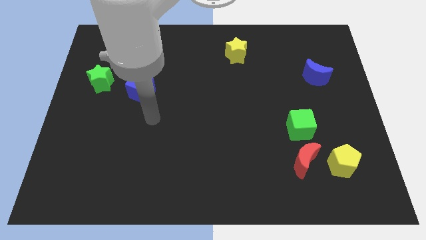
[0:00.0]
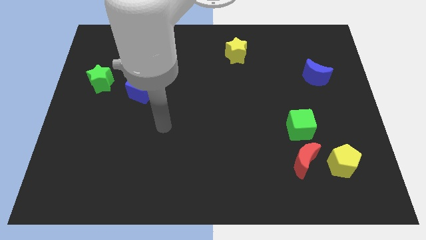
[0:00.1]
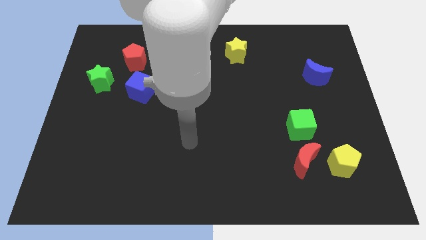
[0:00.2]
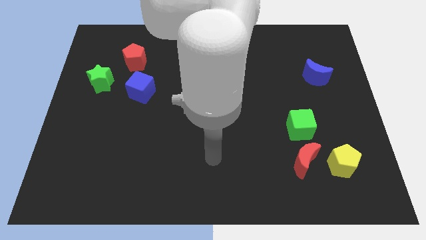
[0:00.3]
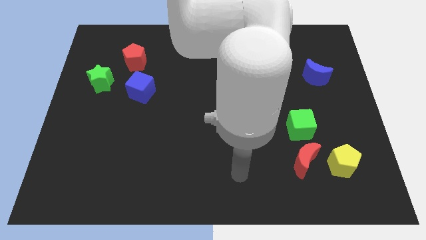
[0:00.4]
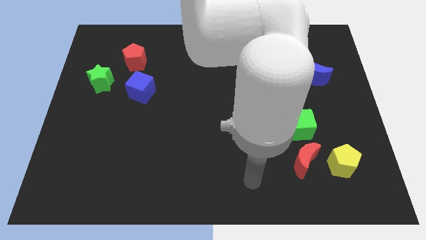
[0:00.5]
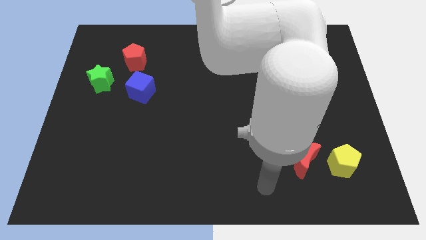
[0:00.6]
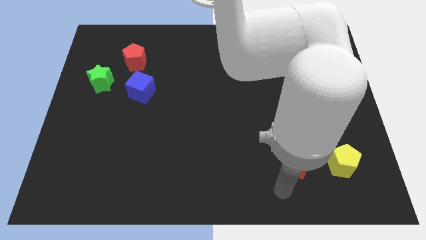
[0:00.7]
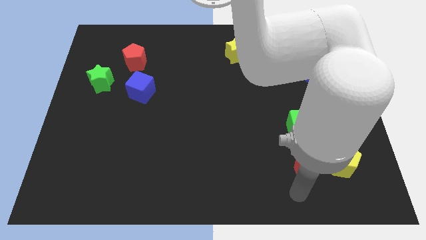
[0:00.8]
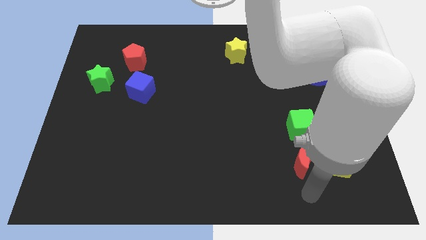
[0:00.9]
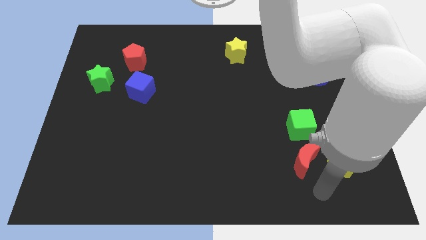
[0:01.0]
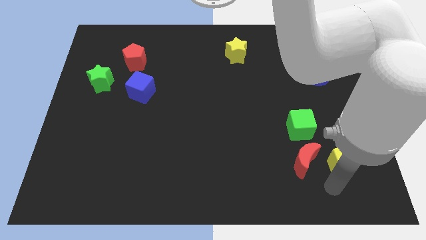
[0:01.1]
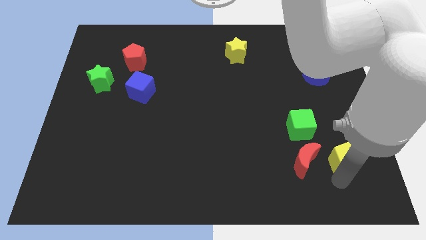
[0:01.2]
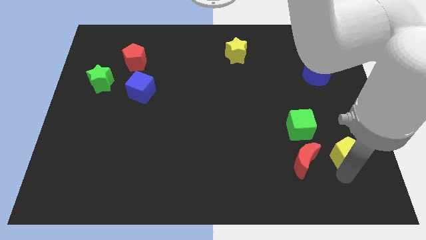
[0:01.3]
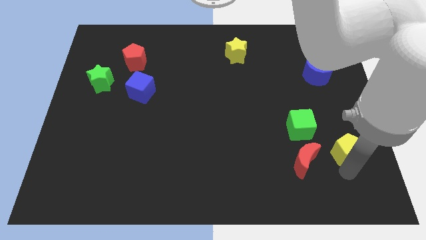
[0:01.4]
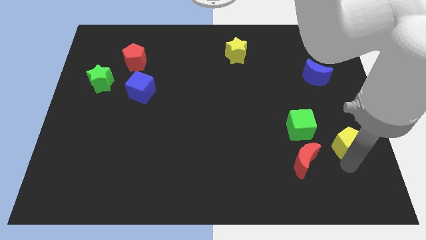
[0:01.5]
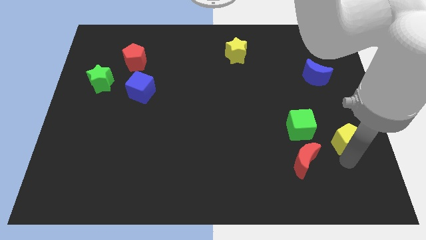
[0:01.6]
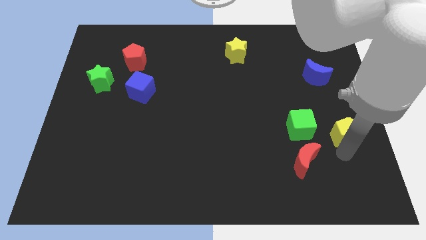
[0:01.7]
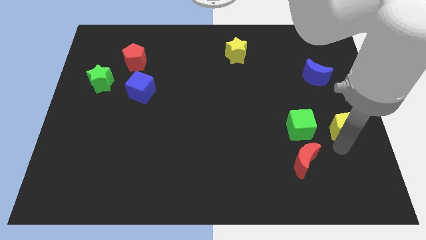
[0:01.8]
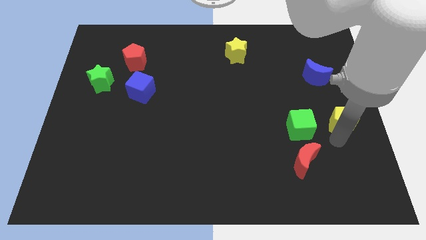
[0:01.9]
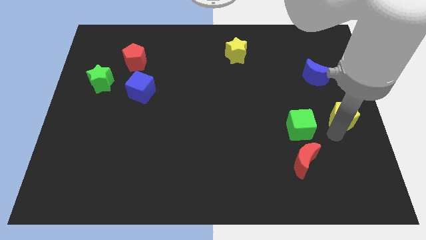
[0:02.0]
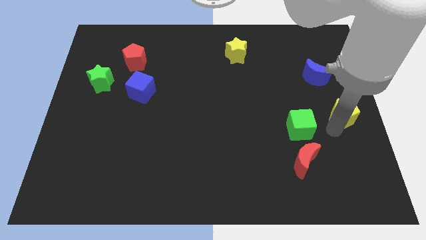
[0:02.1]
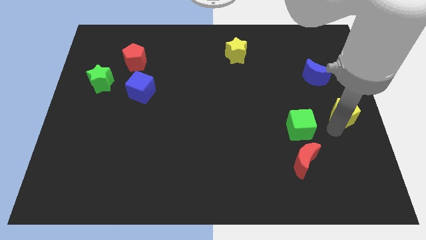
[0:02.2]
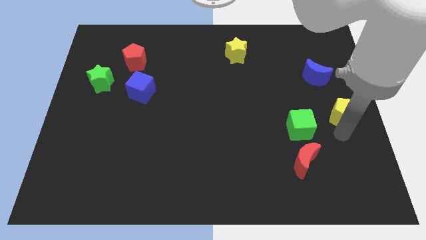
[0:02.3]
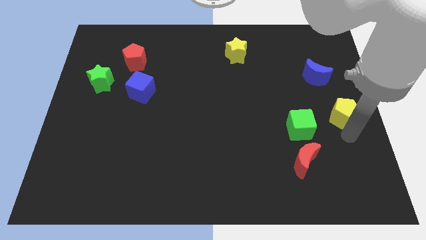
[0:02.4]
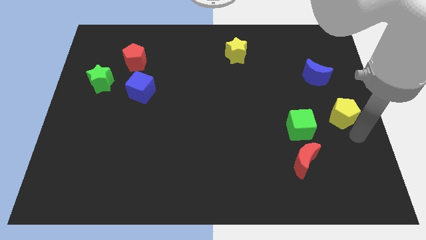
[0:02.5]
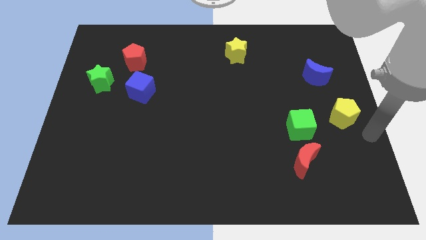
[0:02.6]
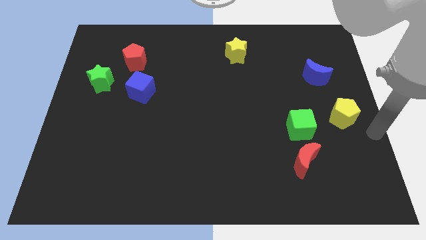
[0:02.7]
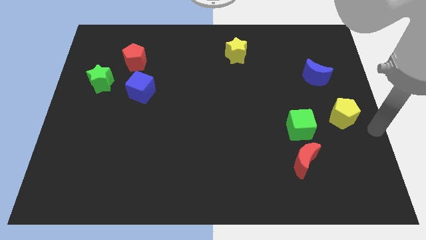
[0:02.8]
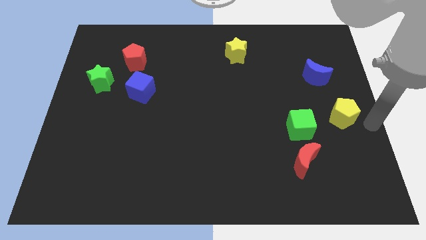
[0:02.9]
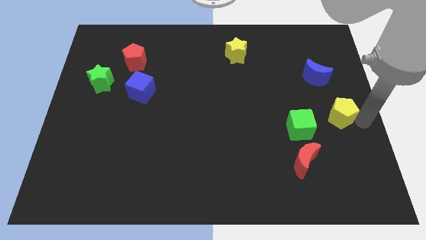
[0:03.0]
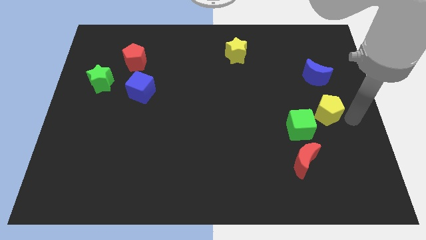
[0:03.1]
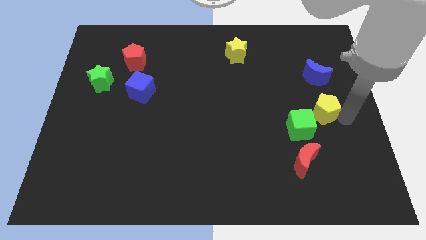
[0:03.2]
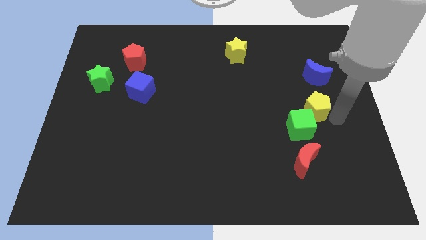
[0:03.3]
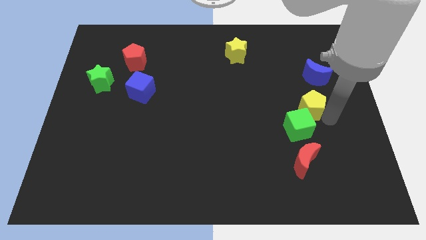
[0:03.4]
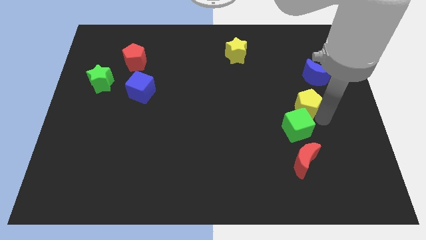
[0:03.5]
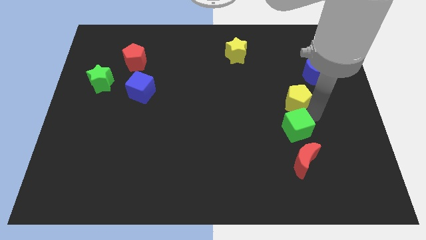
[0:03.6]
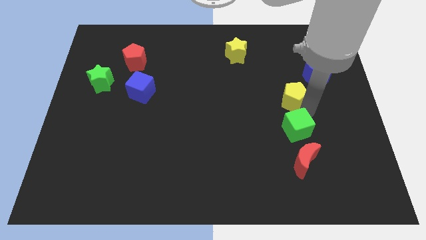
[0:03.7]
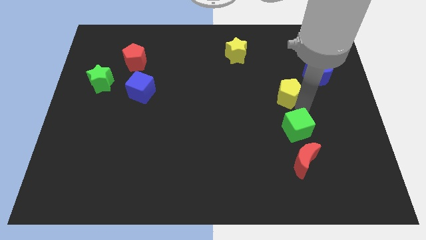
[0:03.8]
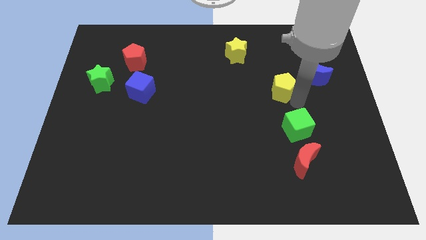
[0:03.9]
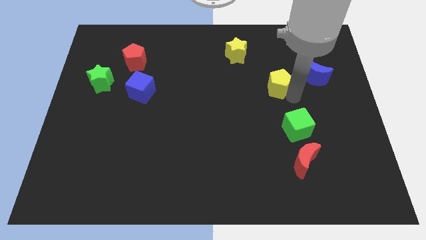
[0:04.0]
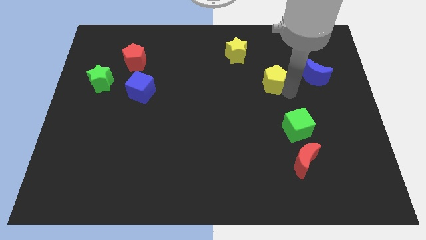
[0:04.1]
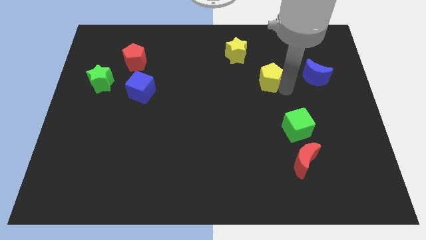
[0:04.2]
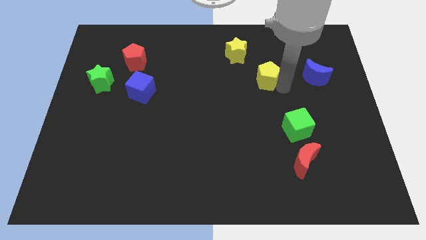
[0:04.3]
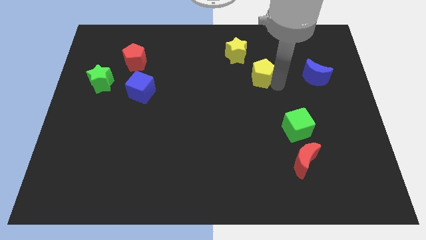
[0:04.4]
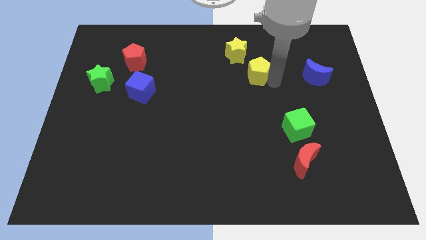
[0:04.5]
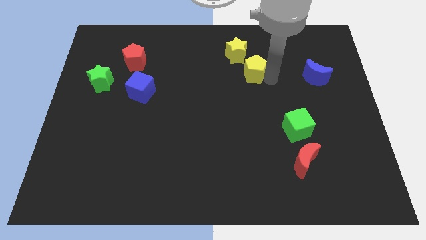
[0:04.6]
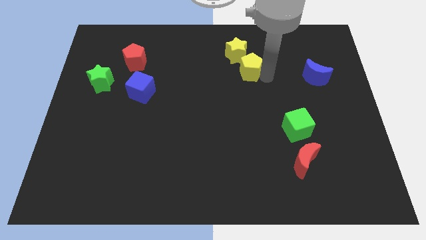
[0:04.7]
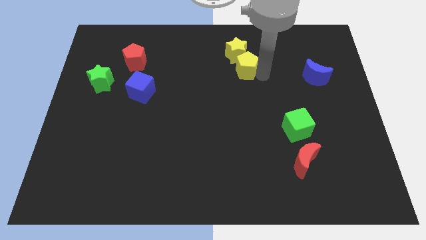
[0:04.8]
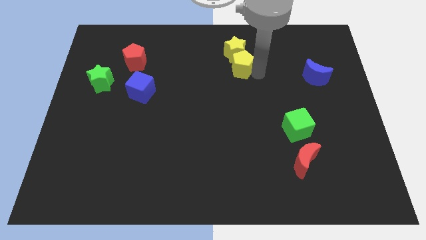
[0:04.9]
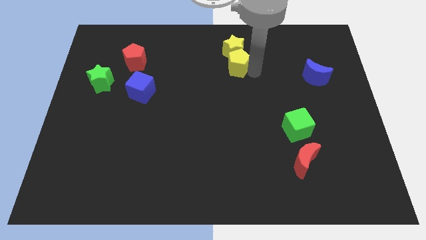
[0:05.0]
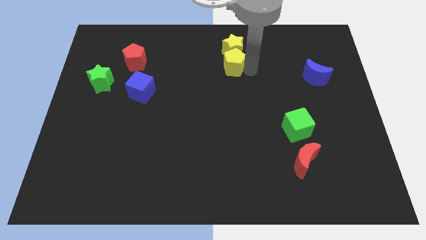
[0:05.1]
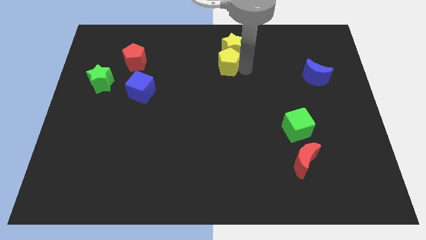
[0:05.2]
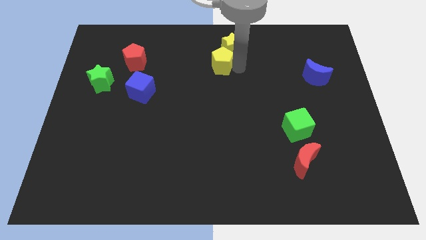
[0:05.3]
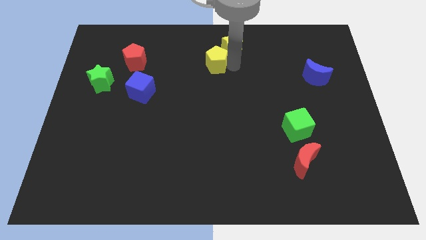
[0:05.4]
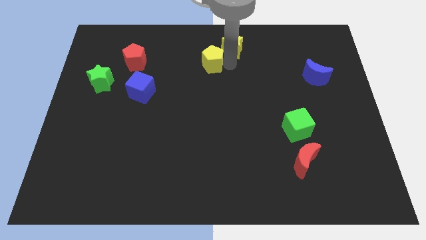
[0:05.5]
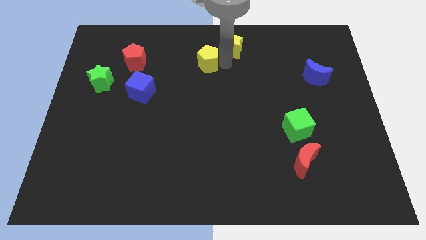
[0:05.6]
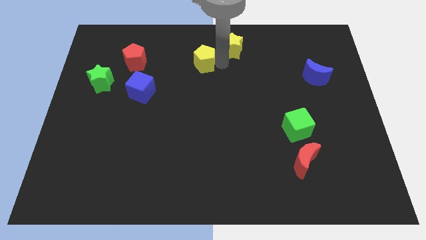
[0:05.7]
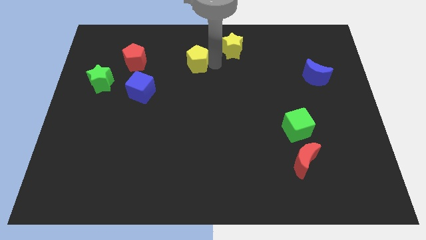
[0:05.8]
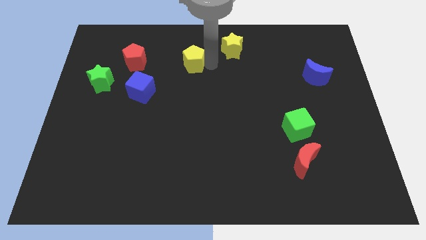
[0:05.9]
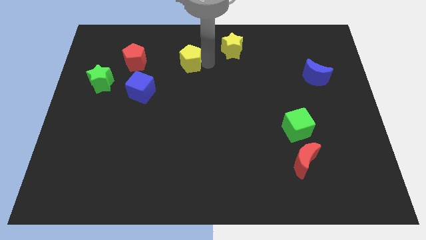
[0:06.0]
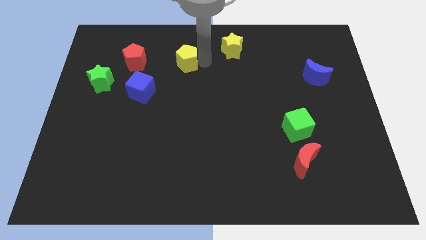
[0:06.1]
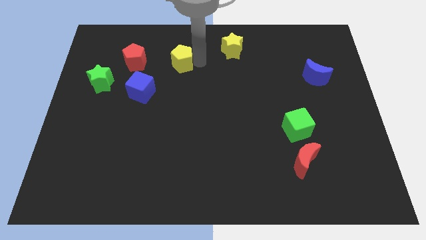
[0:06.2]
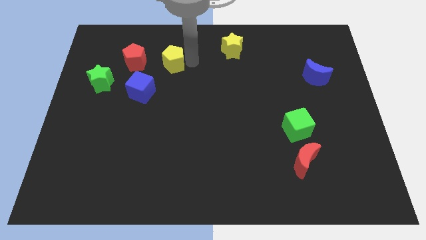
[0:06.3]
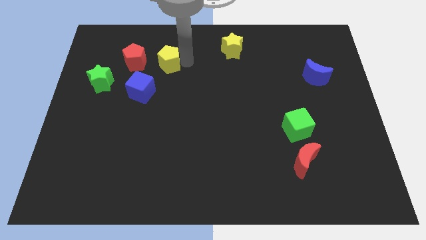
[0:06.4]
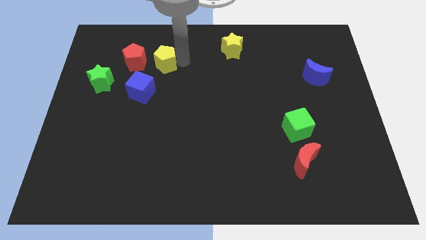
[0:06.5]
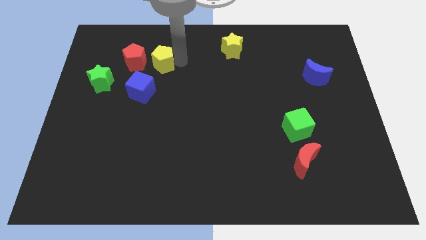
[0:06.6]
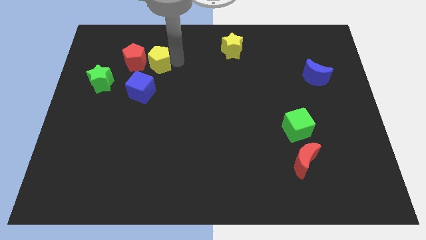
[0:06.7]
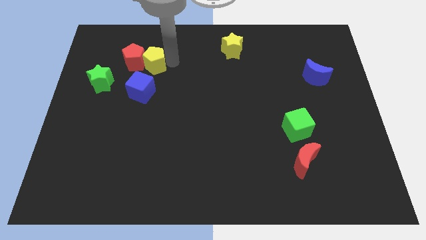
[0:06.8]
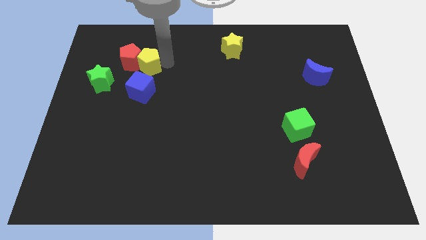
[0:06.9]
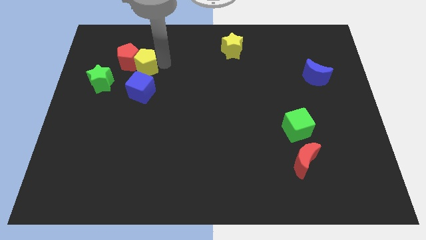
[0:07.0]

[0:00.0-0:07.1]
slide the yellow pentagon close to the red pentagon

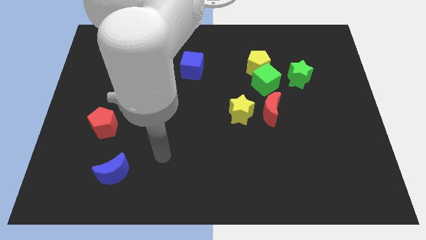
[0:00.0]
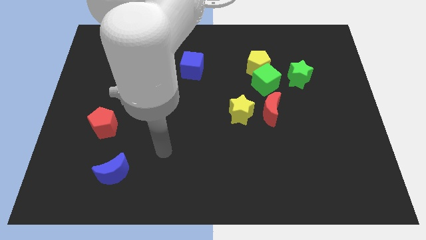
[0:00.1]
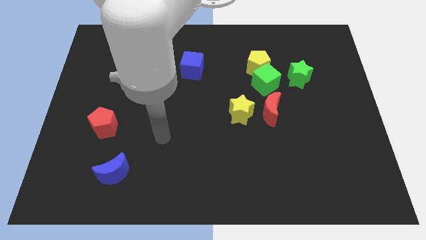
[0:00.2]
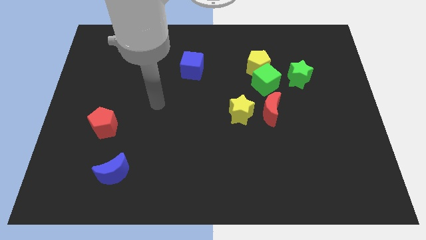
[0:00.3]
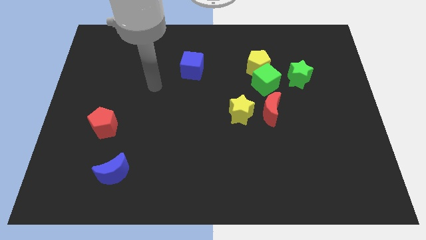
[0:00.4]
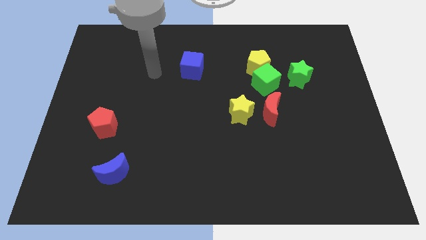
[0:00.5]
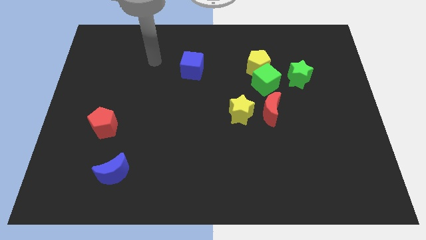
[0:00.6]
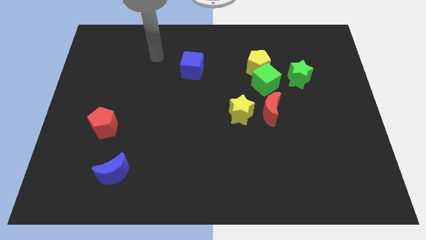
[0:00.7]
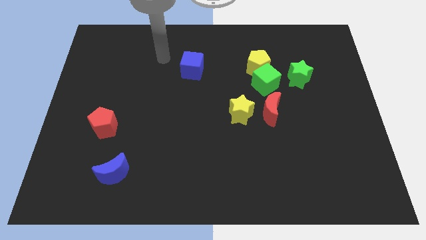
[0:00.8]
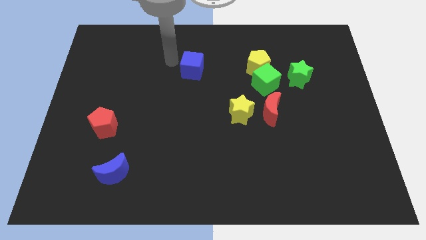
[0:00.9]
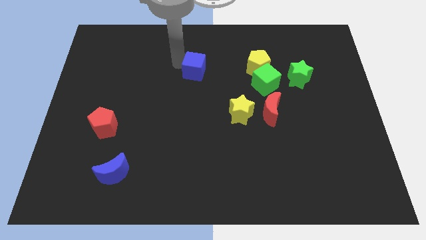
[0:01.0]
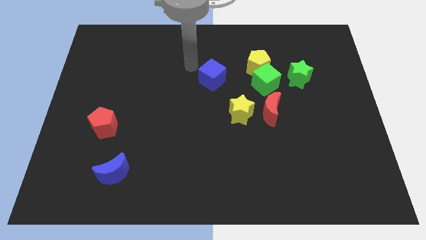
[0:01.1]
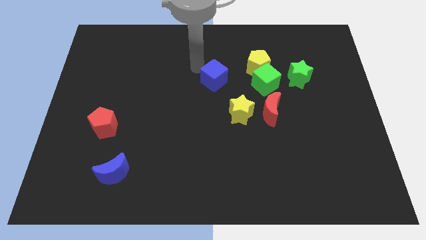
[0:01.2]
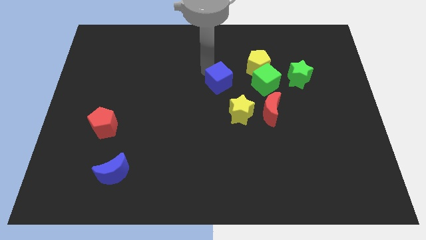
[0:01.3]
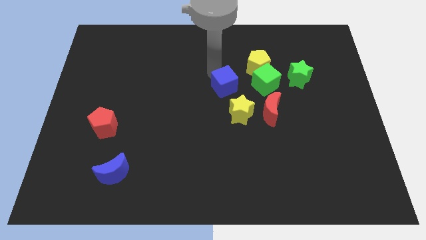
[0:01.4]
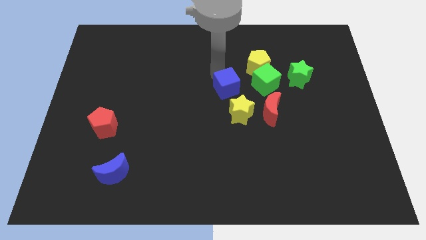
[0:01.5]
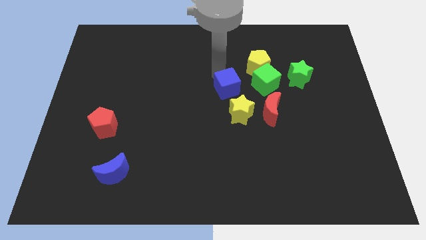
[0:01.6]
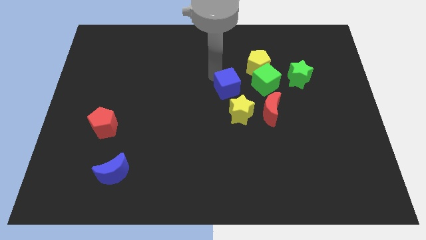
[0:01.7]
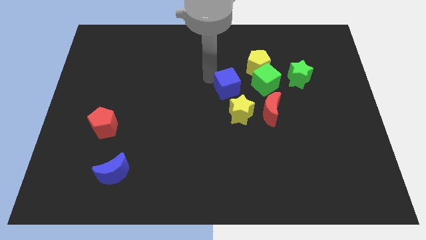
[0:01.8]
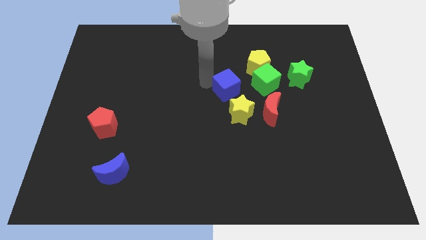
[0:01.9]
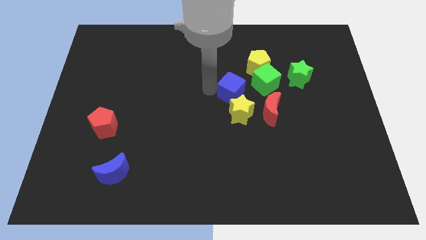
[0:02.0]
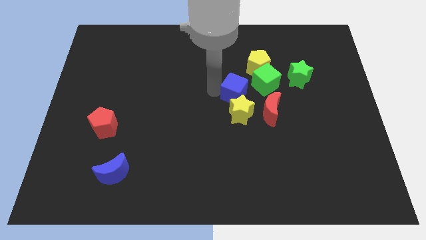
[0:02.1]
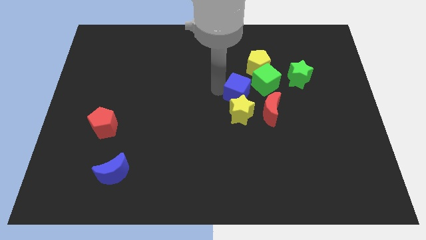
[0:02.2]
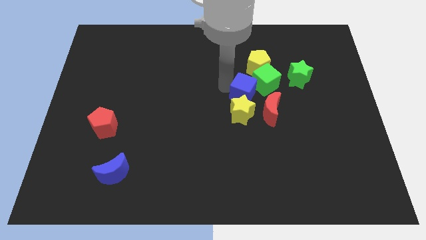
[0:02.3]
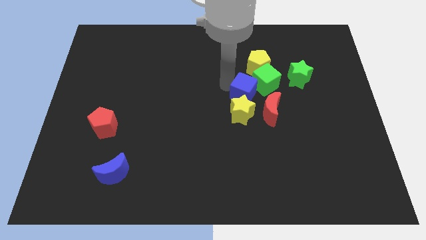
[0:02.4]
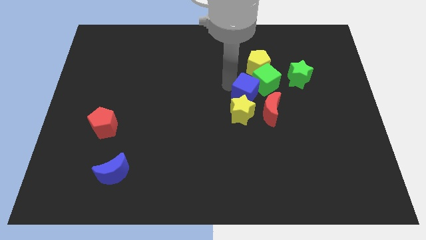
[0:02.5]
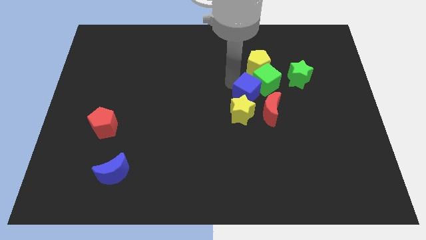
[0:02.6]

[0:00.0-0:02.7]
move the blue cube towards the green cube
